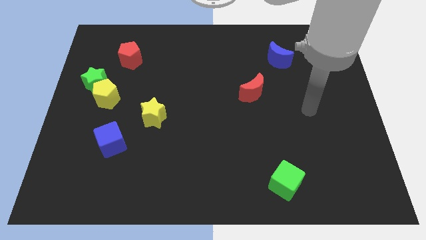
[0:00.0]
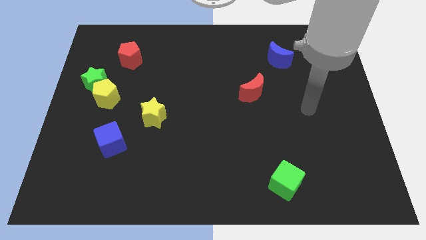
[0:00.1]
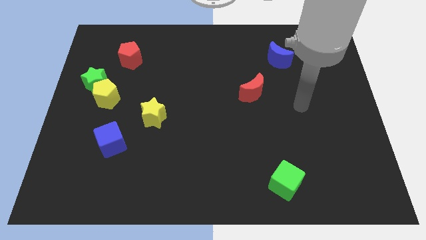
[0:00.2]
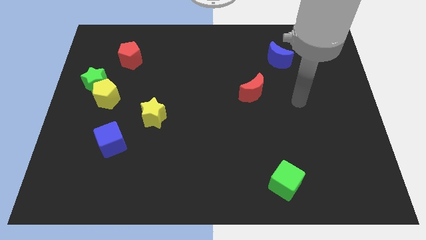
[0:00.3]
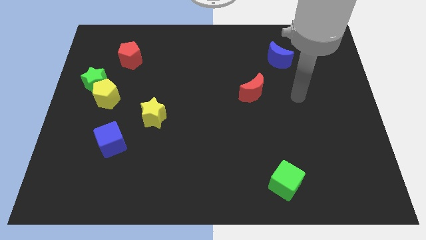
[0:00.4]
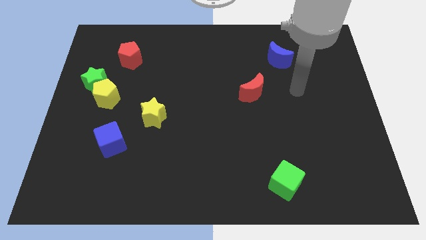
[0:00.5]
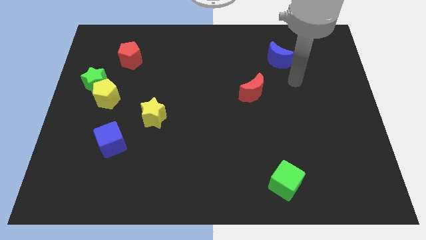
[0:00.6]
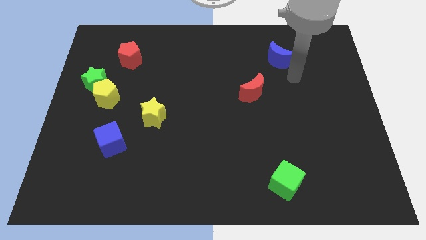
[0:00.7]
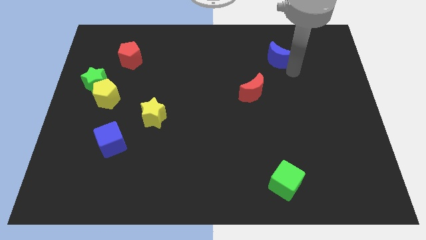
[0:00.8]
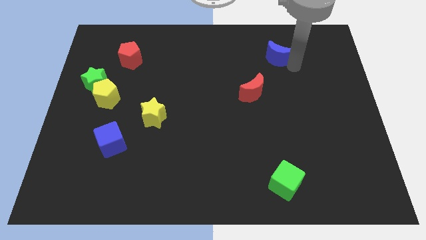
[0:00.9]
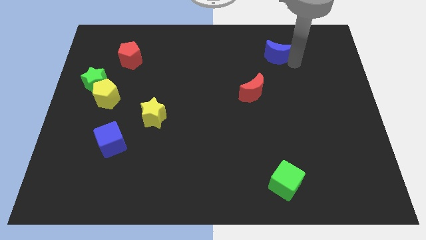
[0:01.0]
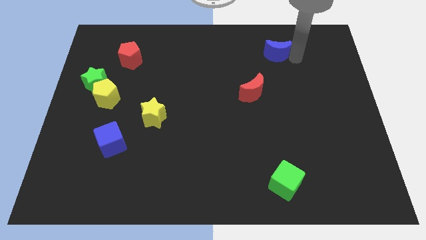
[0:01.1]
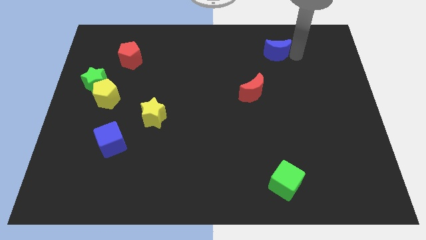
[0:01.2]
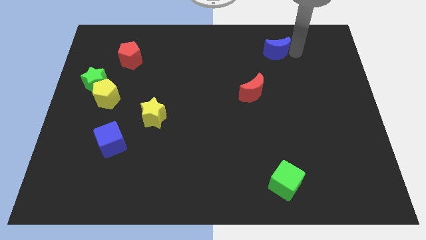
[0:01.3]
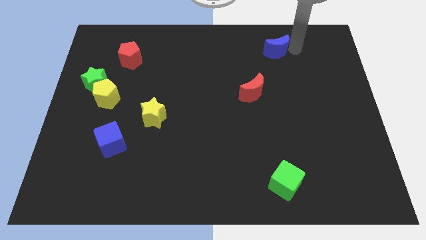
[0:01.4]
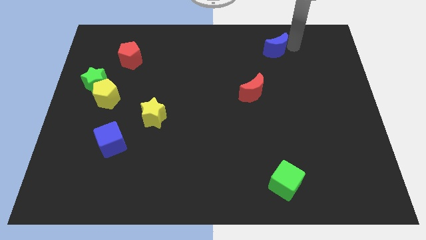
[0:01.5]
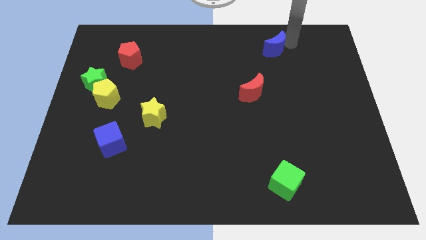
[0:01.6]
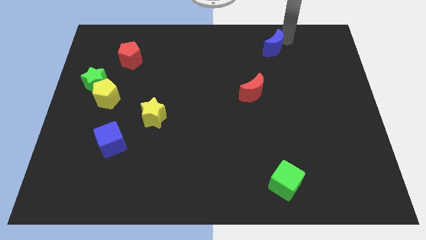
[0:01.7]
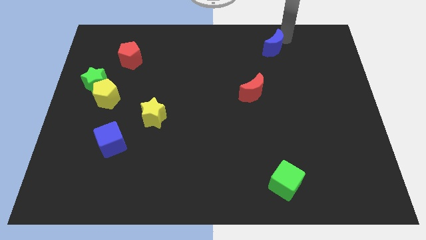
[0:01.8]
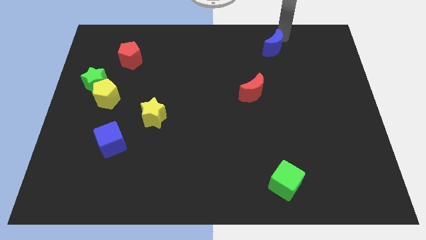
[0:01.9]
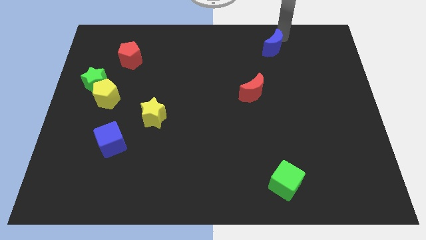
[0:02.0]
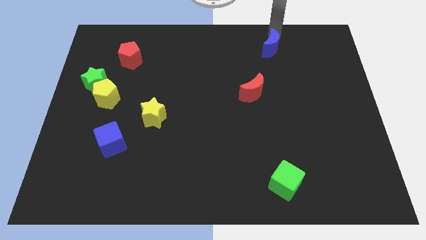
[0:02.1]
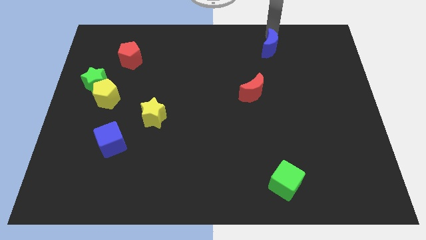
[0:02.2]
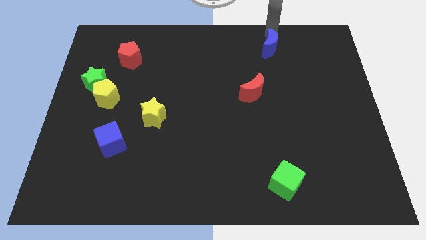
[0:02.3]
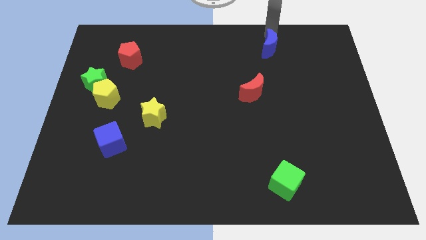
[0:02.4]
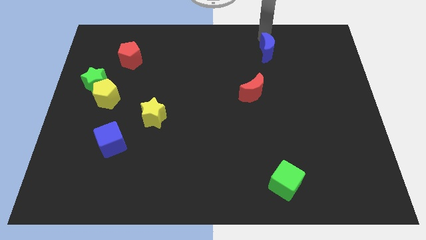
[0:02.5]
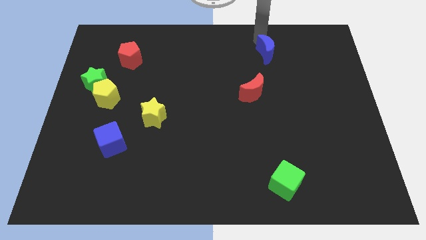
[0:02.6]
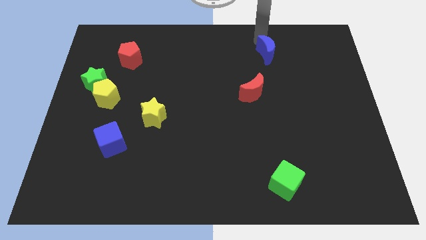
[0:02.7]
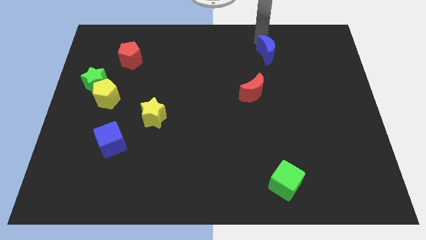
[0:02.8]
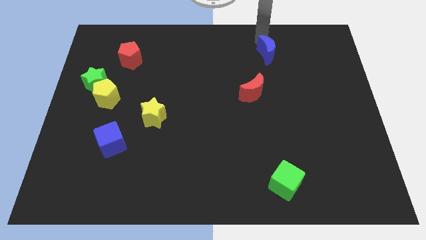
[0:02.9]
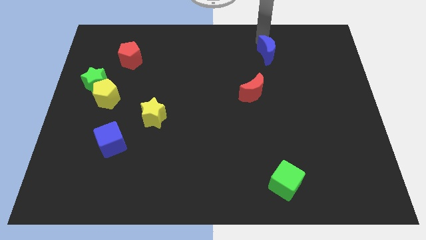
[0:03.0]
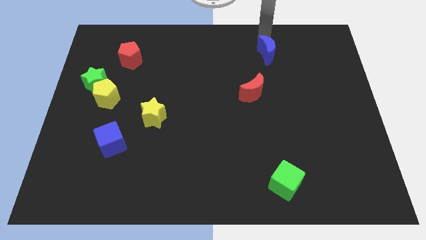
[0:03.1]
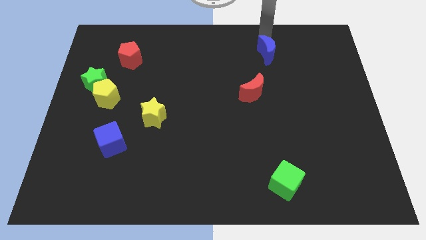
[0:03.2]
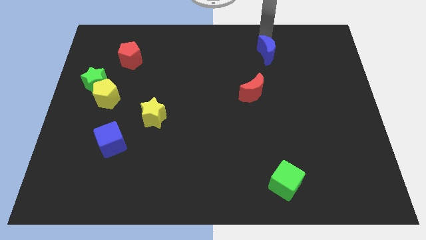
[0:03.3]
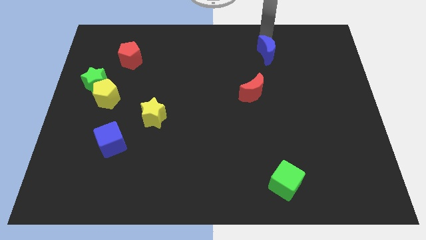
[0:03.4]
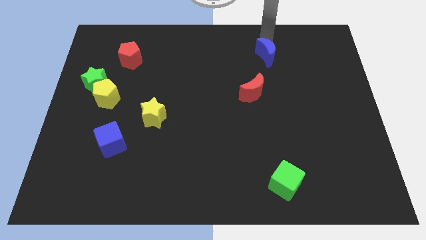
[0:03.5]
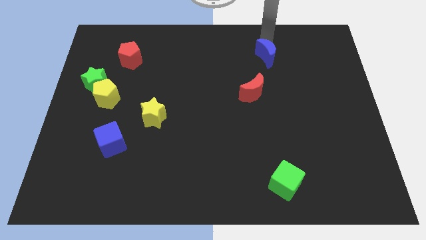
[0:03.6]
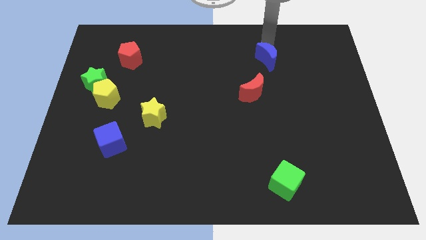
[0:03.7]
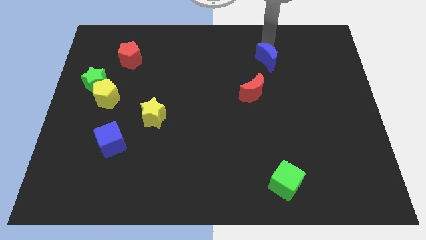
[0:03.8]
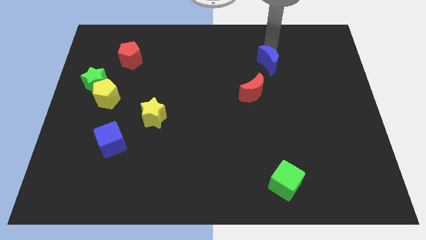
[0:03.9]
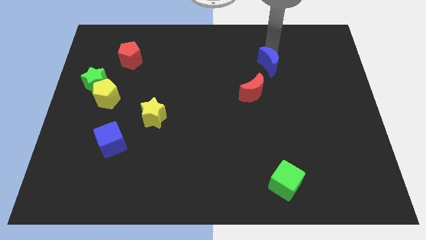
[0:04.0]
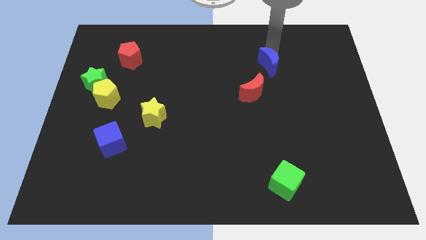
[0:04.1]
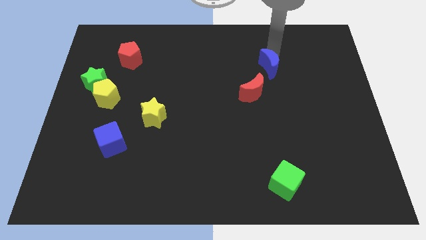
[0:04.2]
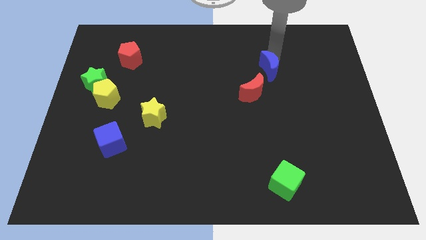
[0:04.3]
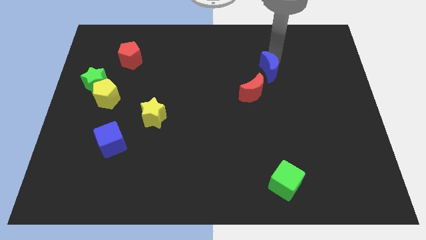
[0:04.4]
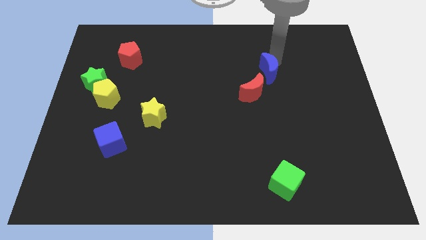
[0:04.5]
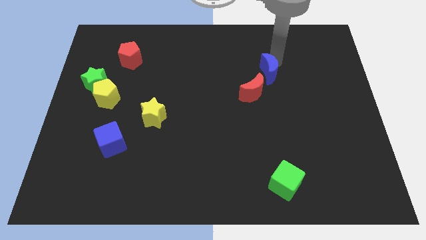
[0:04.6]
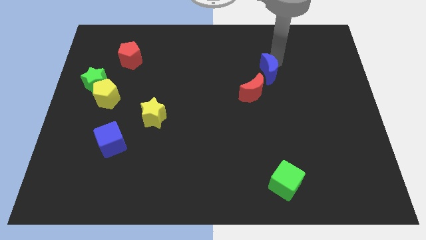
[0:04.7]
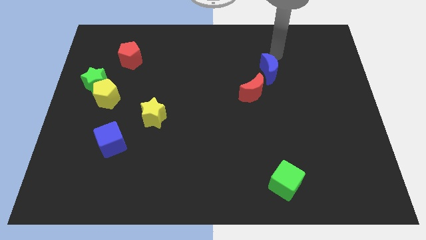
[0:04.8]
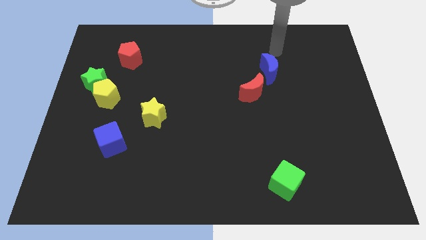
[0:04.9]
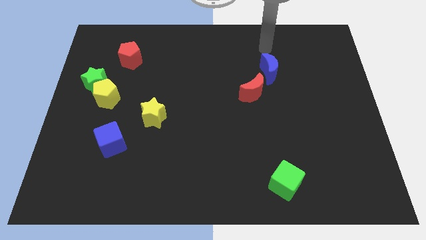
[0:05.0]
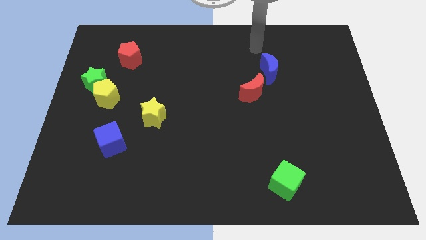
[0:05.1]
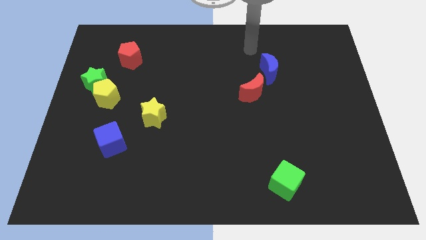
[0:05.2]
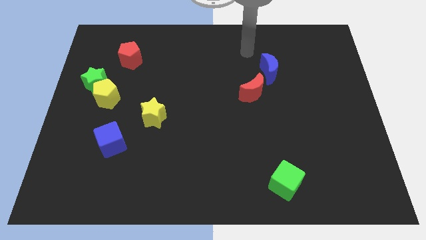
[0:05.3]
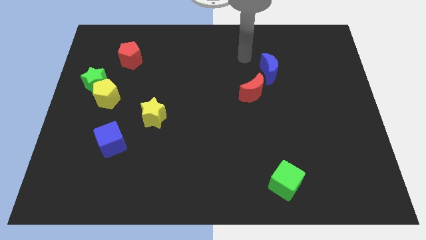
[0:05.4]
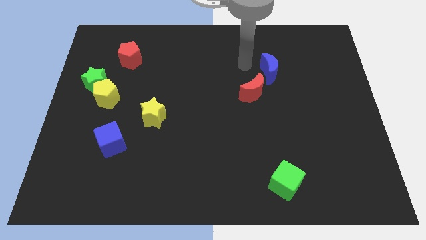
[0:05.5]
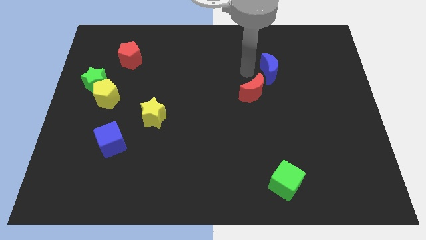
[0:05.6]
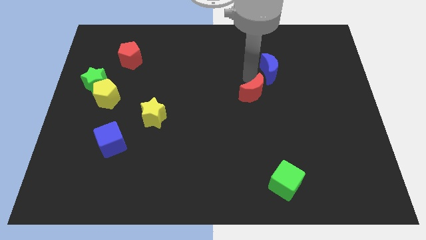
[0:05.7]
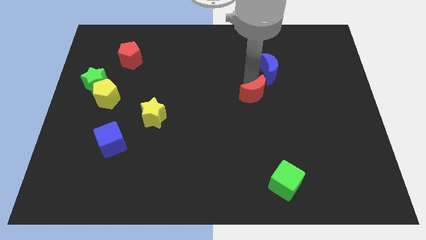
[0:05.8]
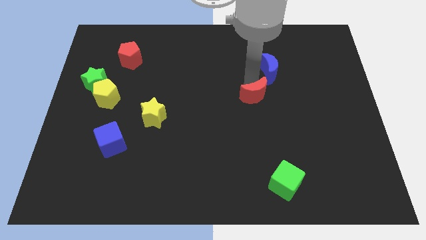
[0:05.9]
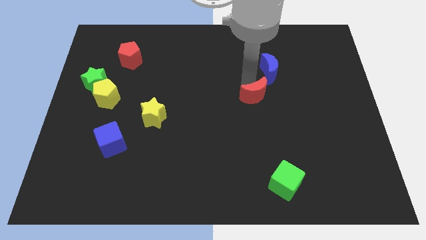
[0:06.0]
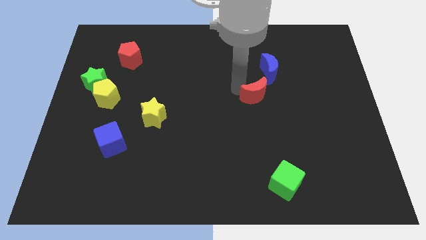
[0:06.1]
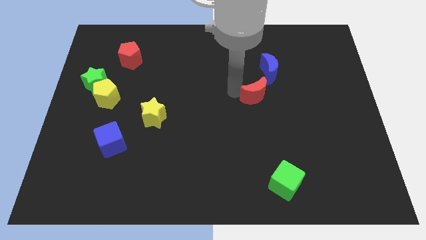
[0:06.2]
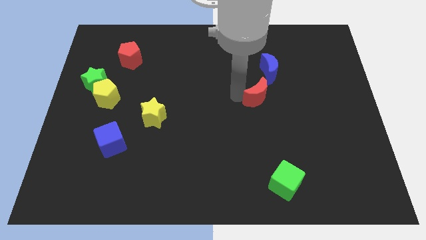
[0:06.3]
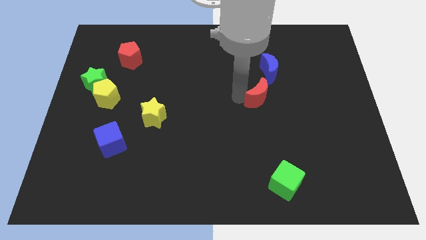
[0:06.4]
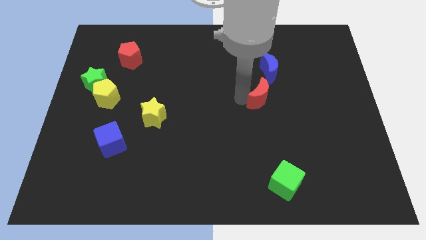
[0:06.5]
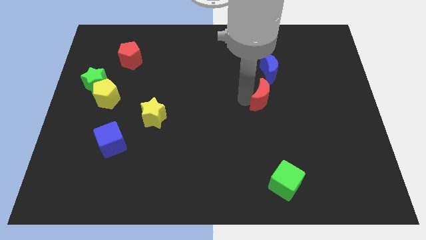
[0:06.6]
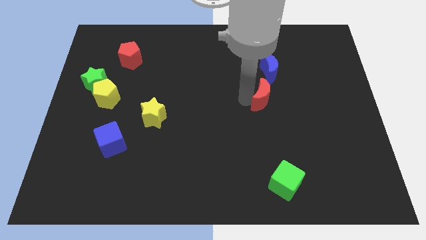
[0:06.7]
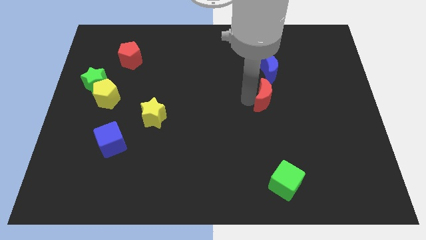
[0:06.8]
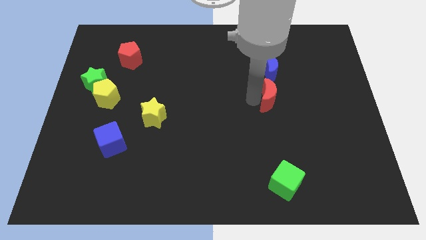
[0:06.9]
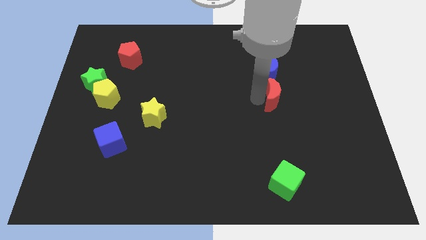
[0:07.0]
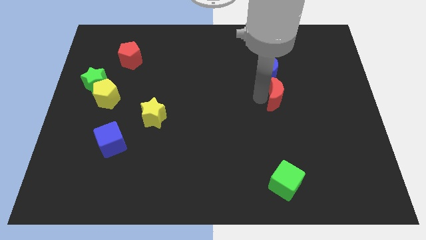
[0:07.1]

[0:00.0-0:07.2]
place the red moon and blue moon together

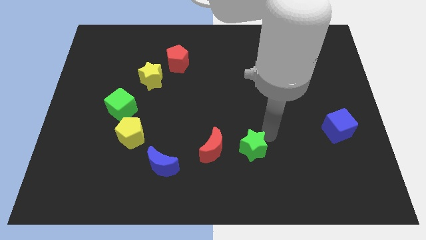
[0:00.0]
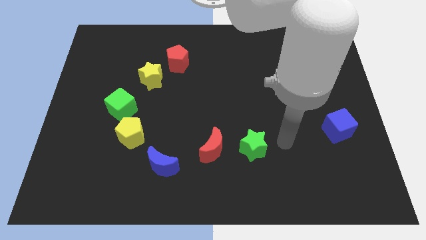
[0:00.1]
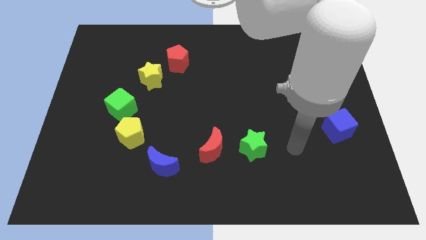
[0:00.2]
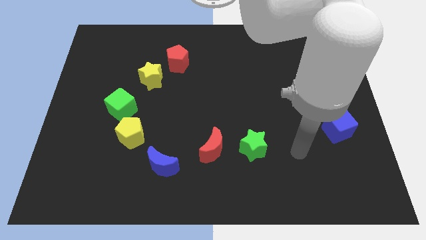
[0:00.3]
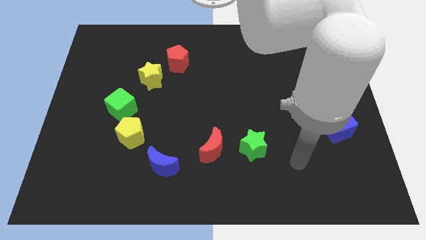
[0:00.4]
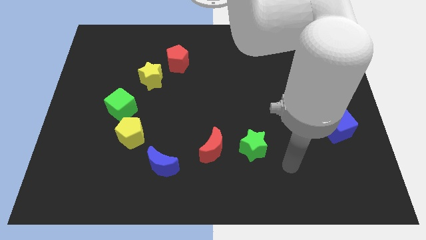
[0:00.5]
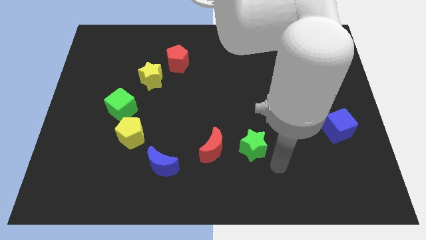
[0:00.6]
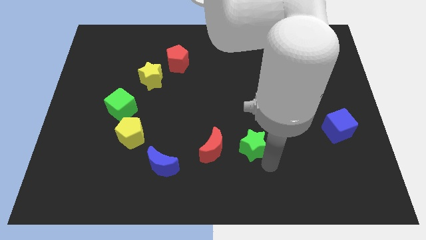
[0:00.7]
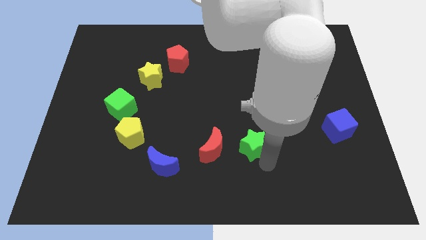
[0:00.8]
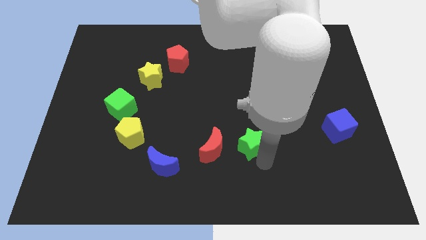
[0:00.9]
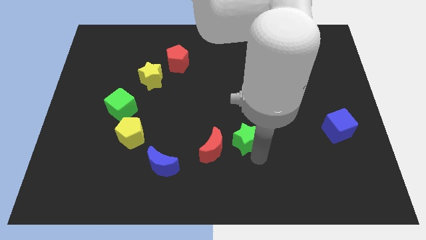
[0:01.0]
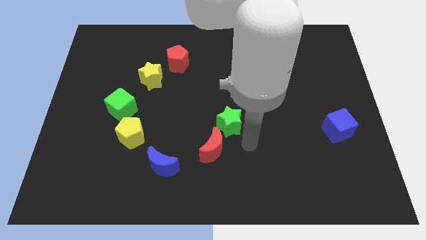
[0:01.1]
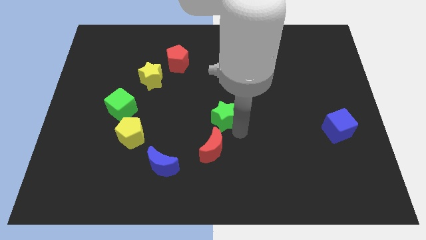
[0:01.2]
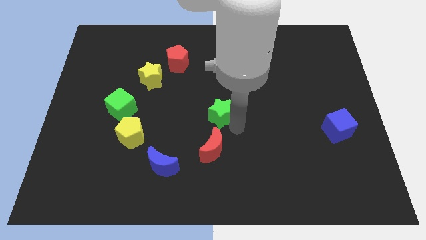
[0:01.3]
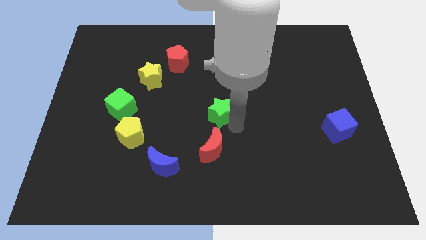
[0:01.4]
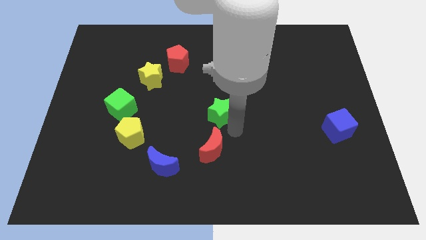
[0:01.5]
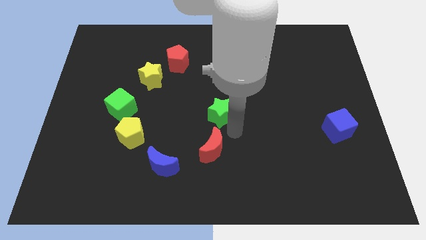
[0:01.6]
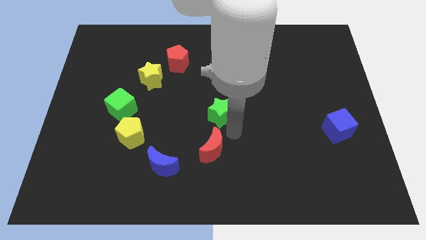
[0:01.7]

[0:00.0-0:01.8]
push the green star to the top of the red crescent
